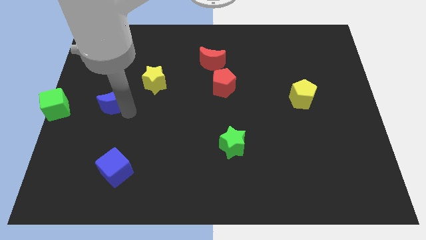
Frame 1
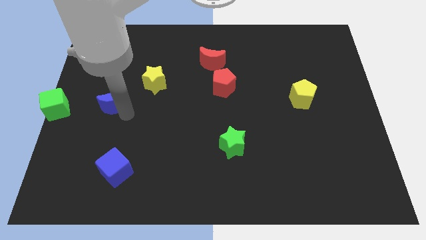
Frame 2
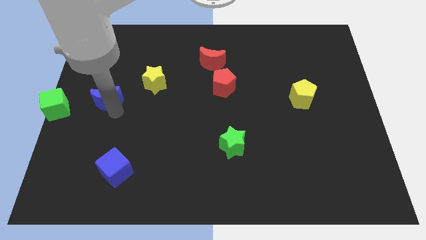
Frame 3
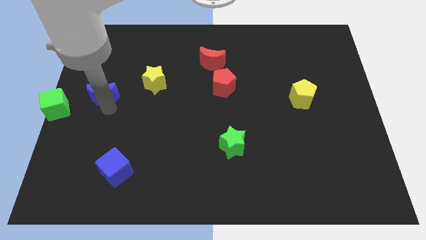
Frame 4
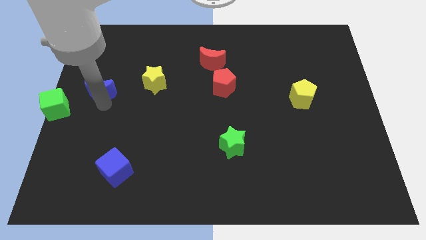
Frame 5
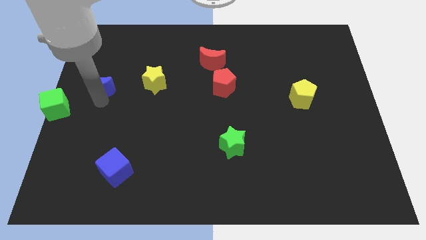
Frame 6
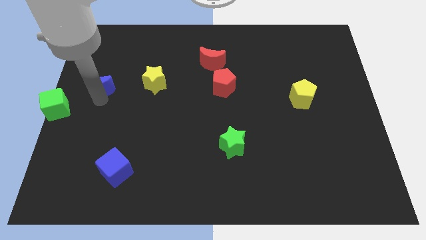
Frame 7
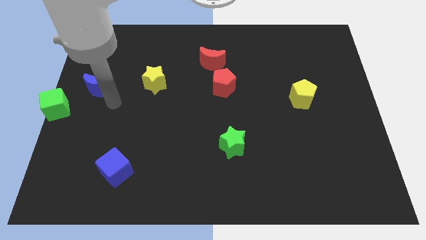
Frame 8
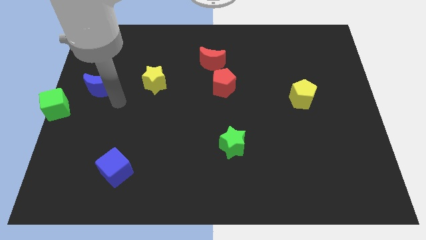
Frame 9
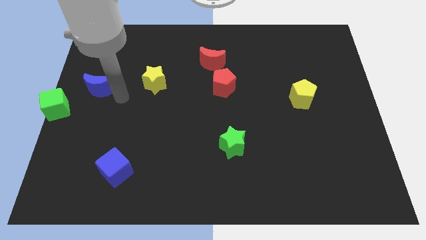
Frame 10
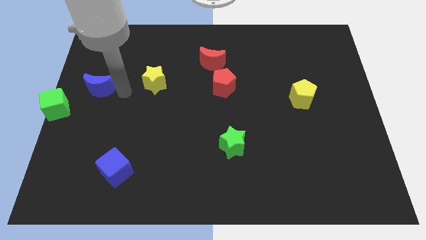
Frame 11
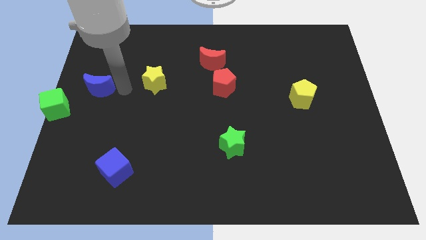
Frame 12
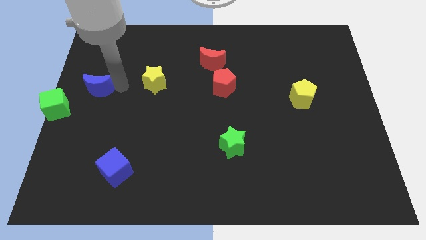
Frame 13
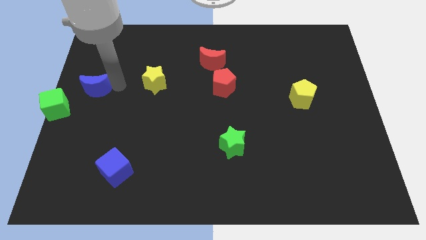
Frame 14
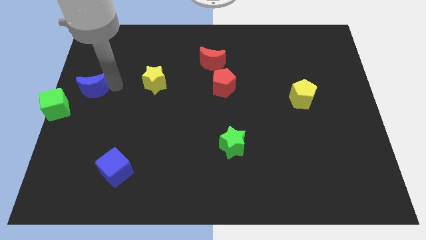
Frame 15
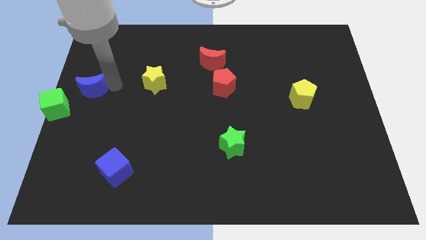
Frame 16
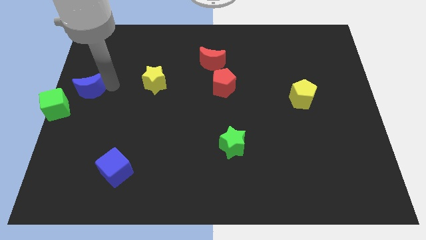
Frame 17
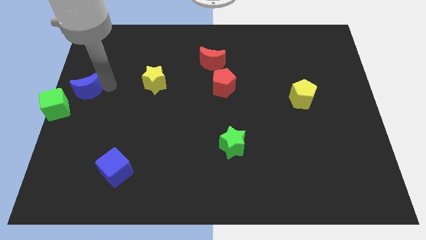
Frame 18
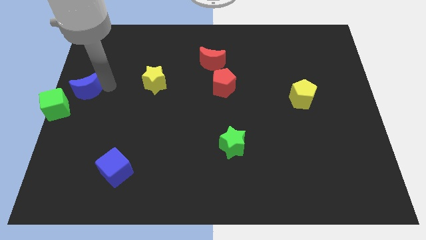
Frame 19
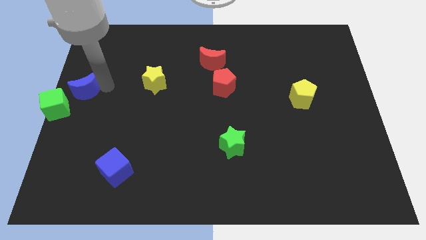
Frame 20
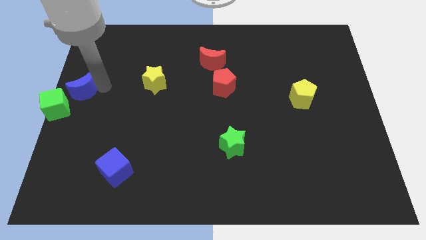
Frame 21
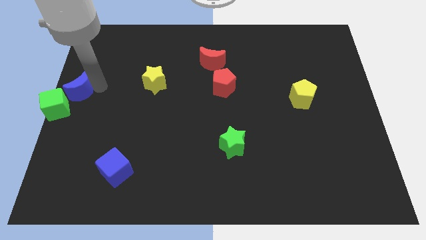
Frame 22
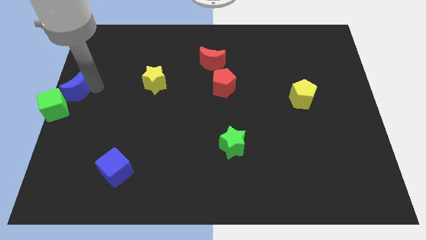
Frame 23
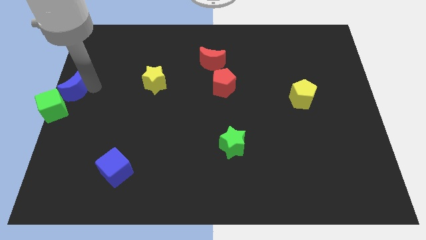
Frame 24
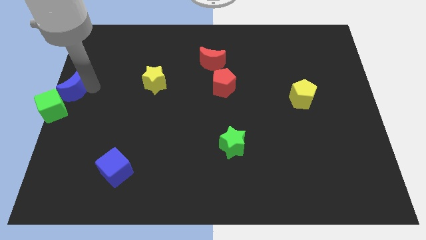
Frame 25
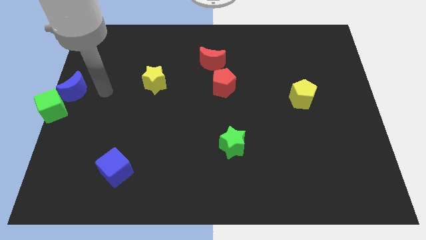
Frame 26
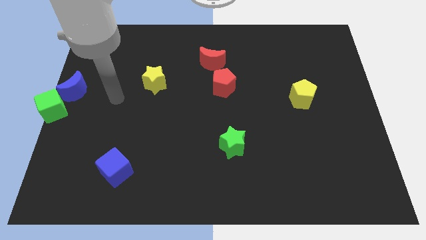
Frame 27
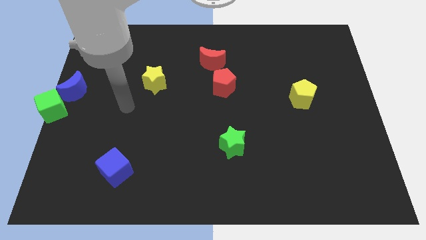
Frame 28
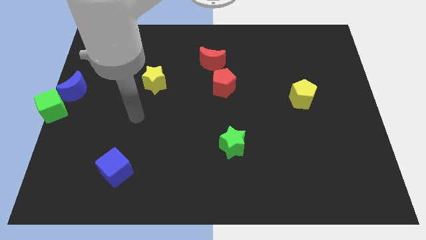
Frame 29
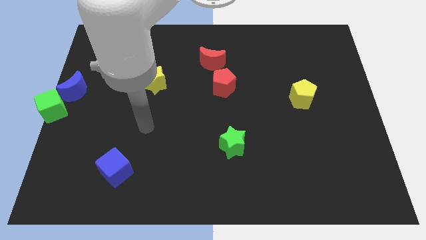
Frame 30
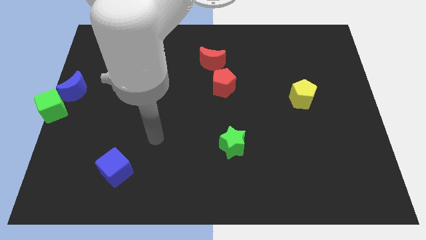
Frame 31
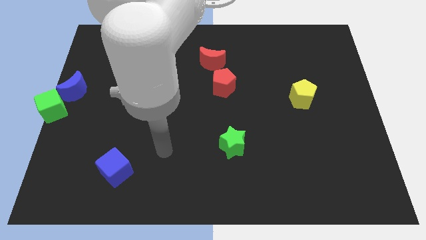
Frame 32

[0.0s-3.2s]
push the blue moon into green cube

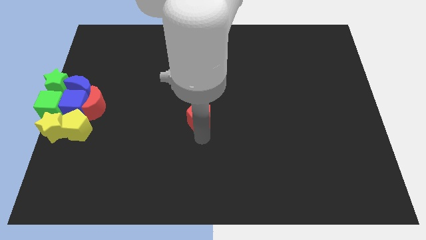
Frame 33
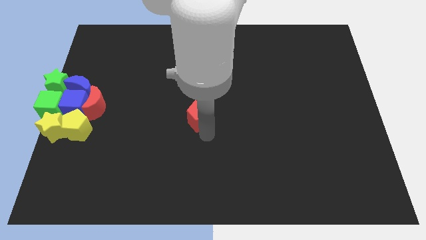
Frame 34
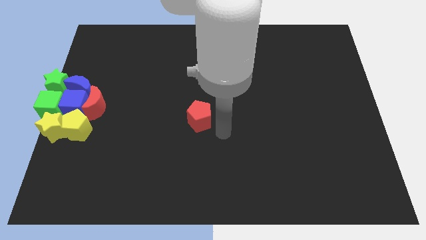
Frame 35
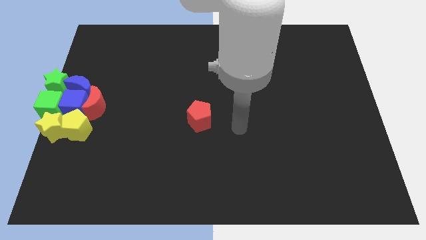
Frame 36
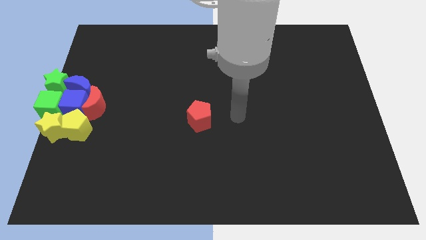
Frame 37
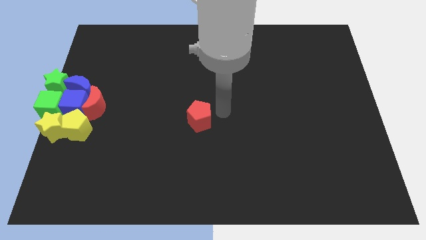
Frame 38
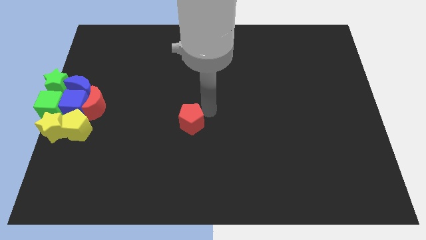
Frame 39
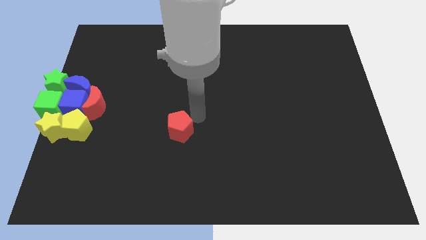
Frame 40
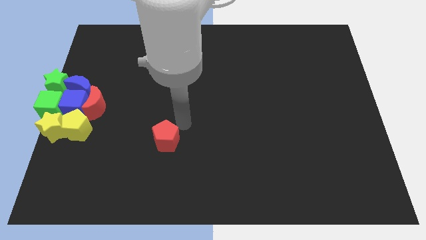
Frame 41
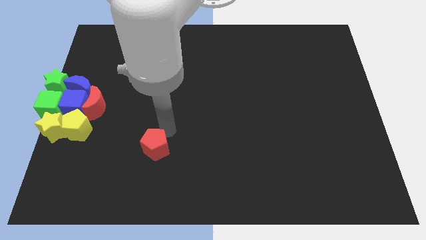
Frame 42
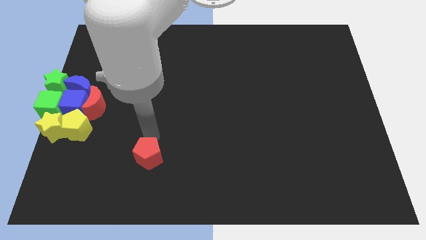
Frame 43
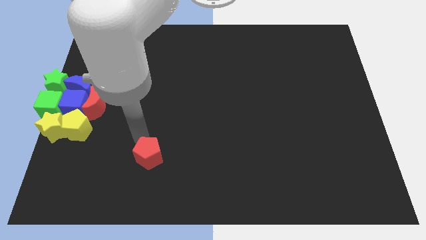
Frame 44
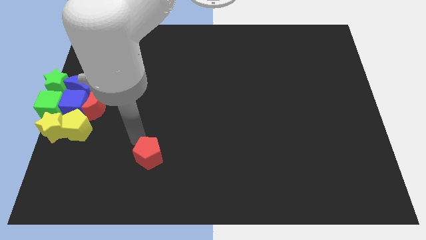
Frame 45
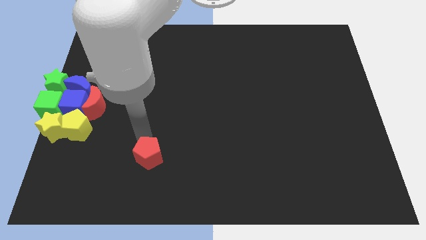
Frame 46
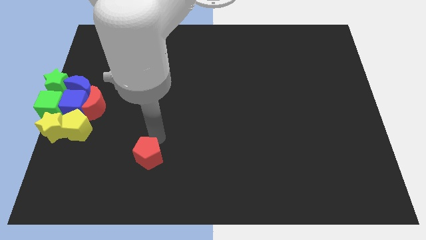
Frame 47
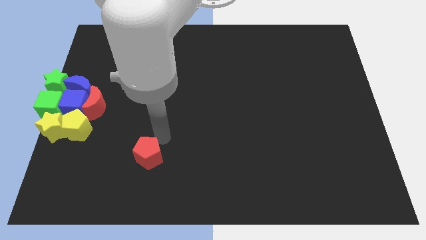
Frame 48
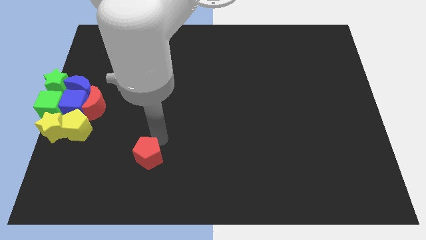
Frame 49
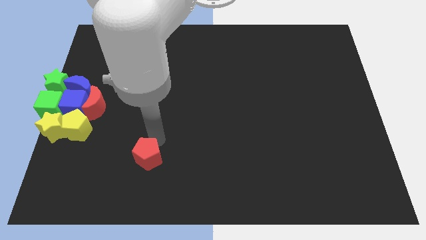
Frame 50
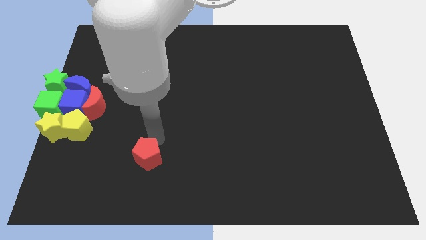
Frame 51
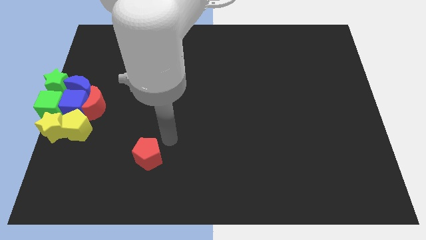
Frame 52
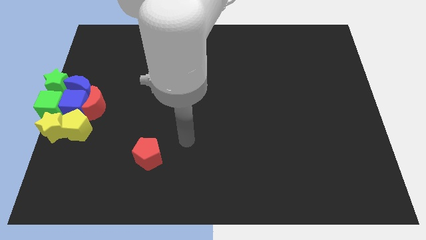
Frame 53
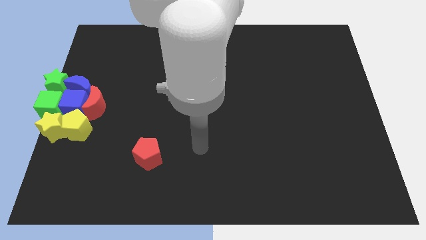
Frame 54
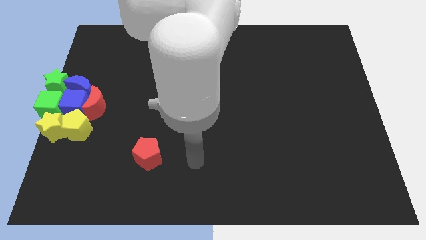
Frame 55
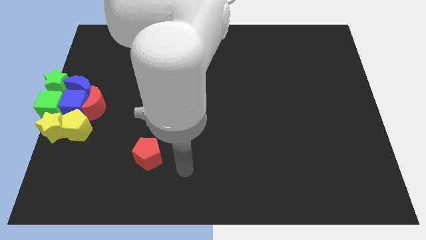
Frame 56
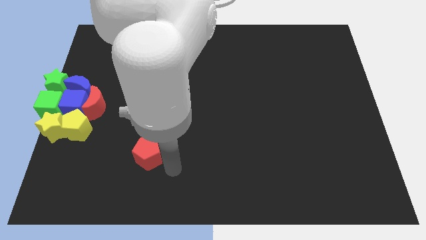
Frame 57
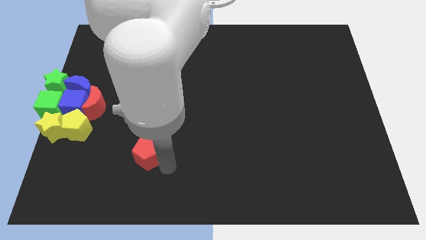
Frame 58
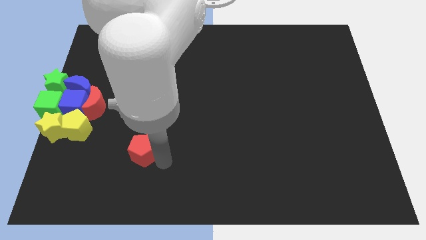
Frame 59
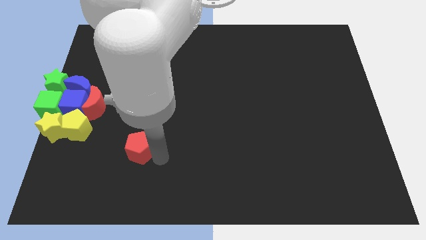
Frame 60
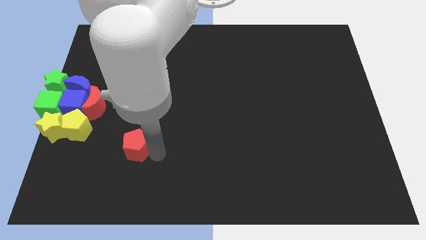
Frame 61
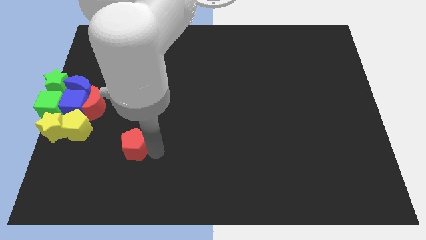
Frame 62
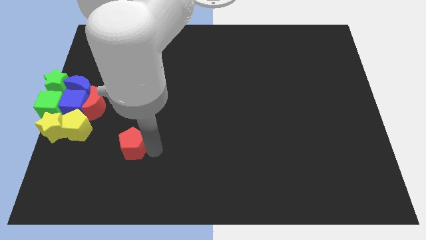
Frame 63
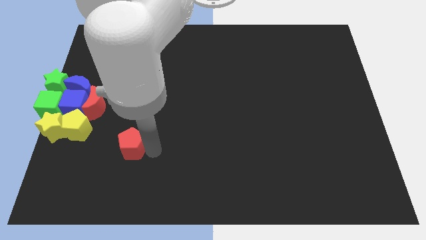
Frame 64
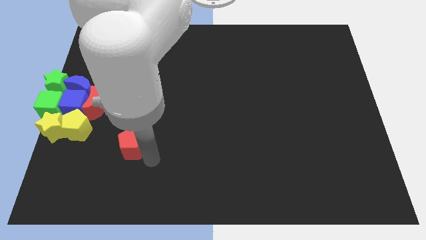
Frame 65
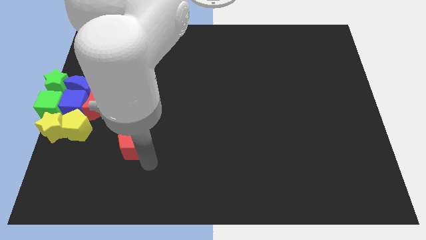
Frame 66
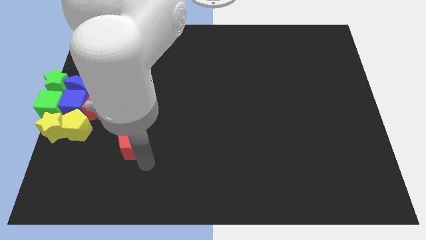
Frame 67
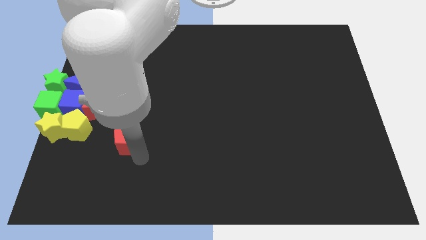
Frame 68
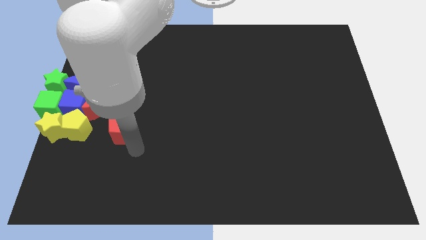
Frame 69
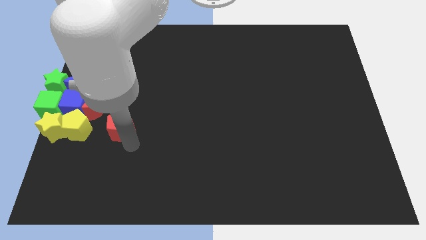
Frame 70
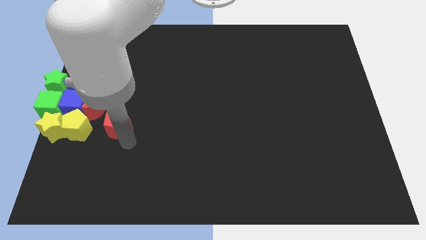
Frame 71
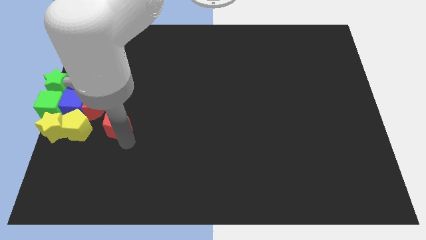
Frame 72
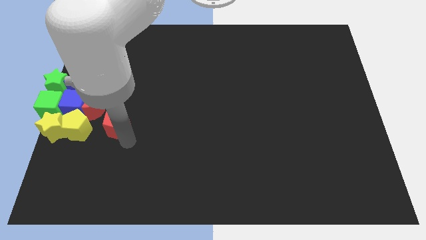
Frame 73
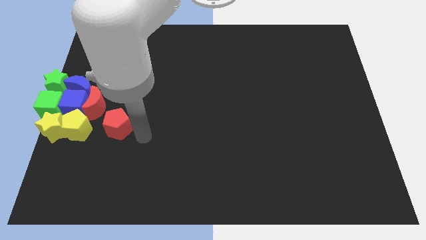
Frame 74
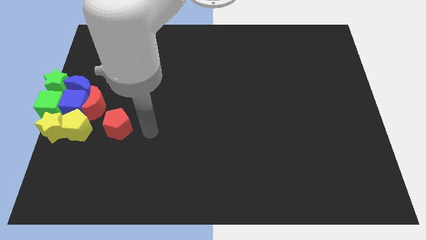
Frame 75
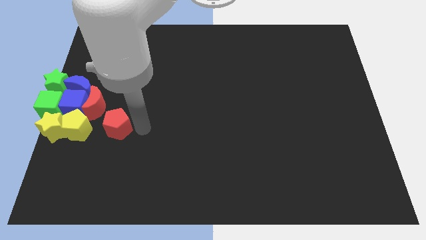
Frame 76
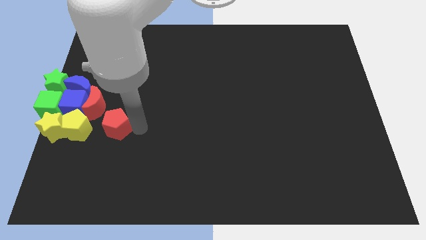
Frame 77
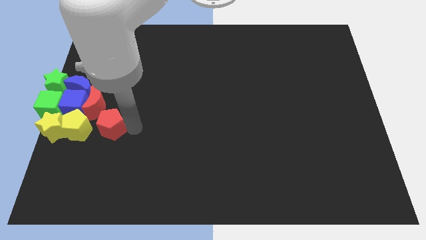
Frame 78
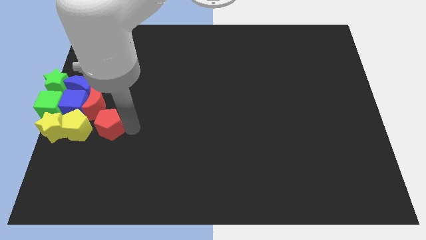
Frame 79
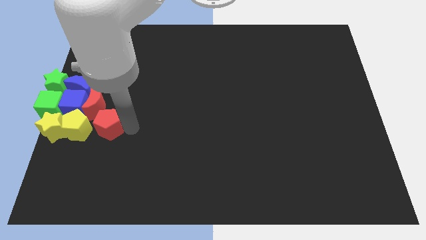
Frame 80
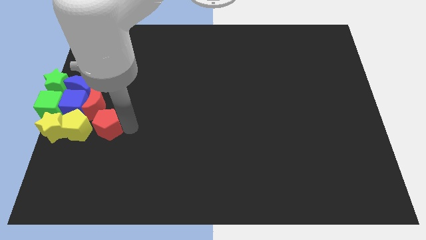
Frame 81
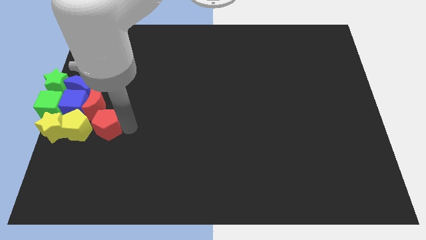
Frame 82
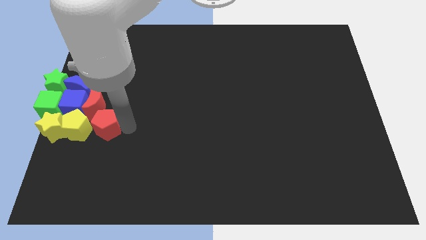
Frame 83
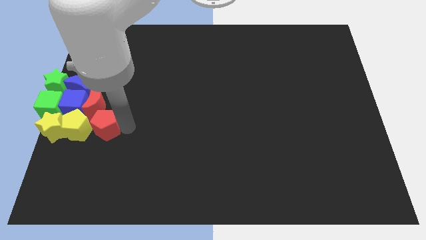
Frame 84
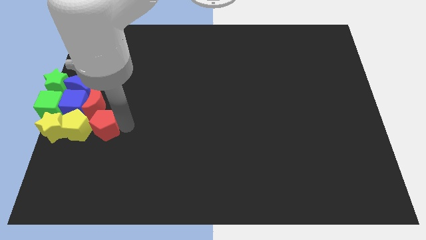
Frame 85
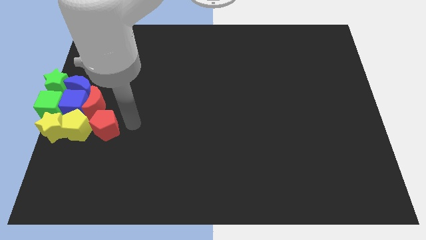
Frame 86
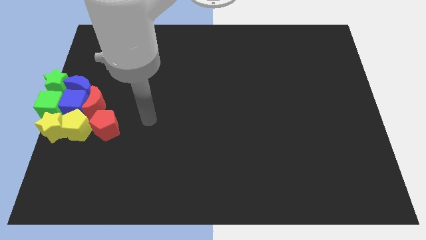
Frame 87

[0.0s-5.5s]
push the red pentagon to the group of blocks

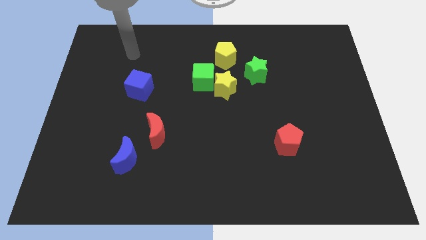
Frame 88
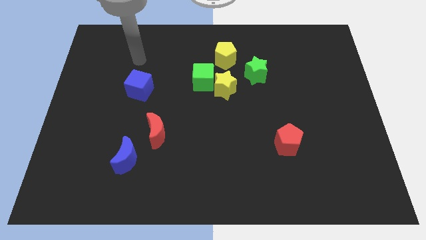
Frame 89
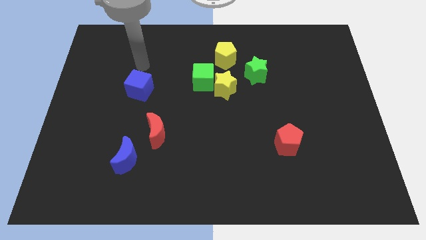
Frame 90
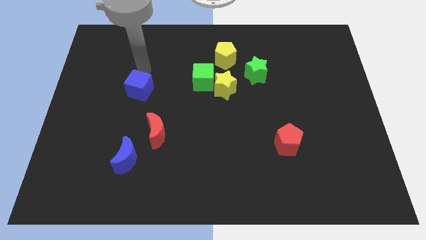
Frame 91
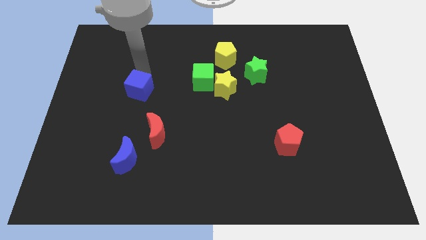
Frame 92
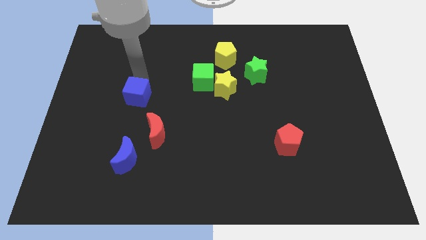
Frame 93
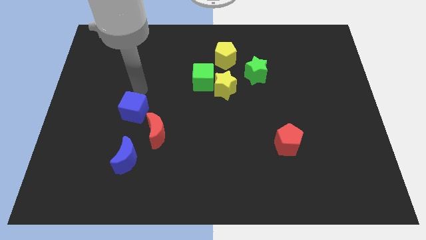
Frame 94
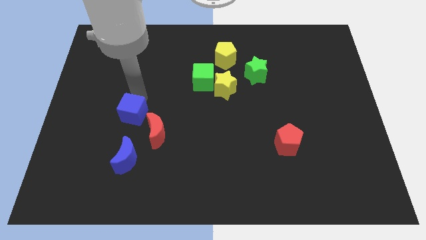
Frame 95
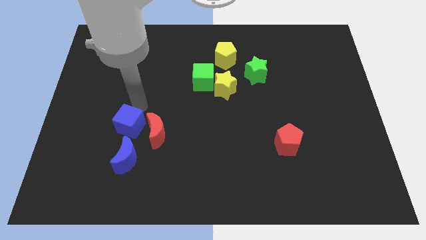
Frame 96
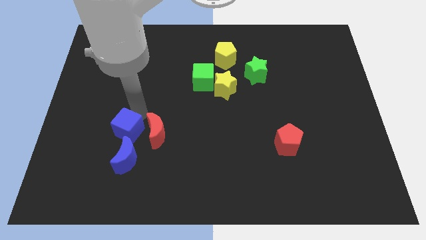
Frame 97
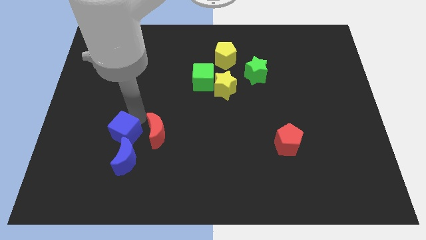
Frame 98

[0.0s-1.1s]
push the blue cube into blue crescent
